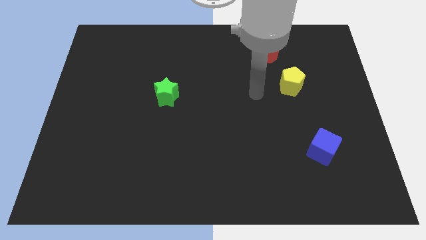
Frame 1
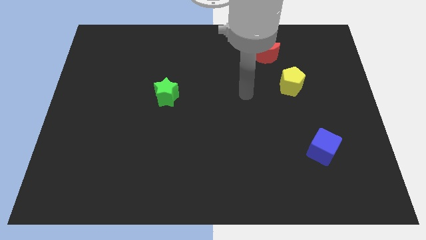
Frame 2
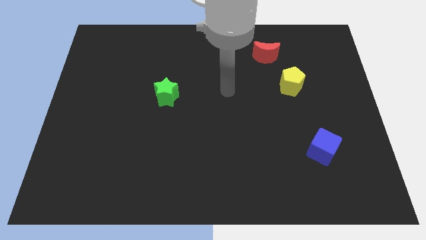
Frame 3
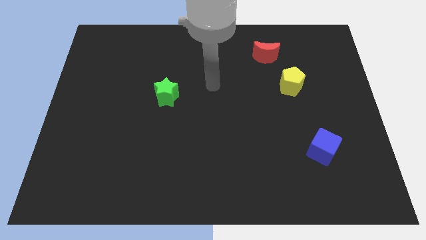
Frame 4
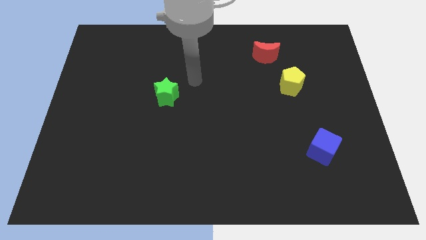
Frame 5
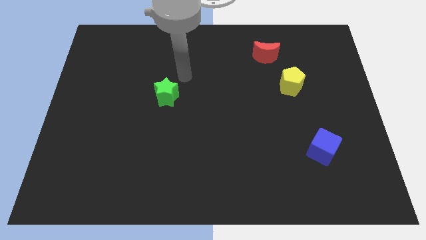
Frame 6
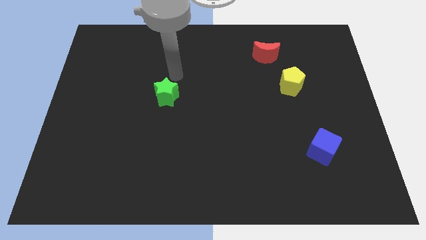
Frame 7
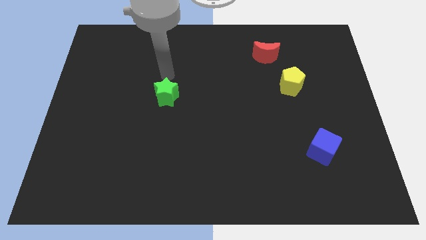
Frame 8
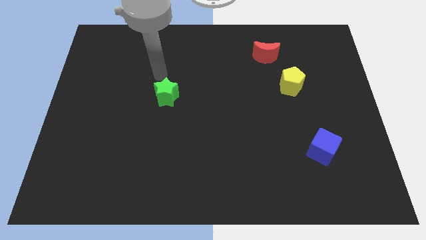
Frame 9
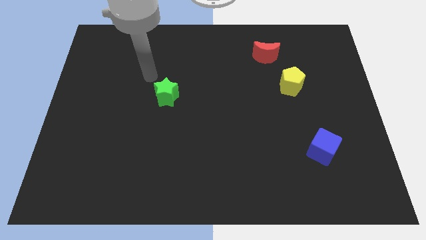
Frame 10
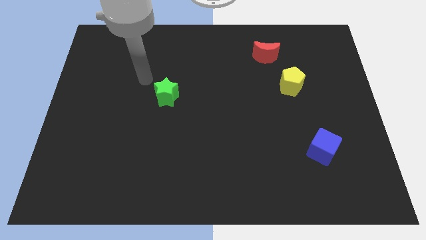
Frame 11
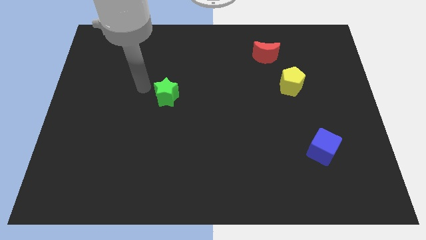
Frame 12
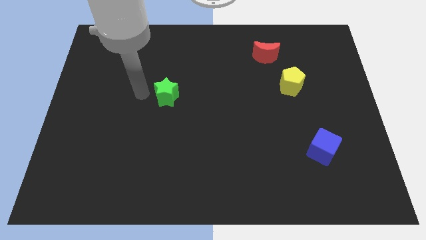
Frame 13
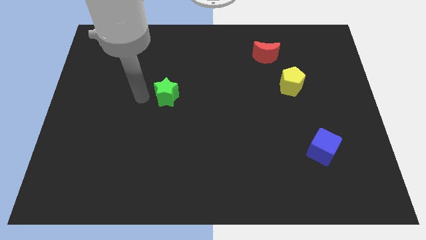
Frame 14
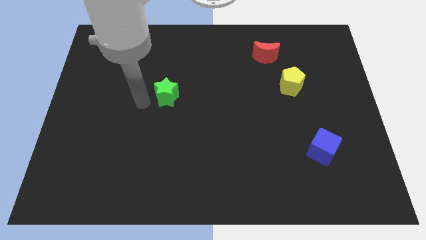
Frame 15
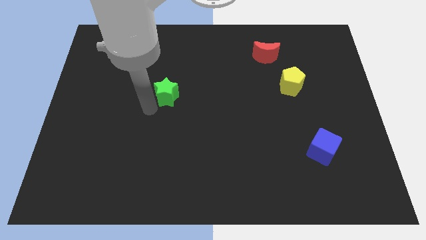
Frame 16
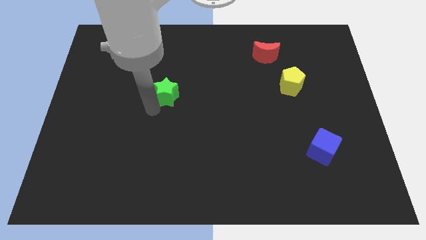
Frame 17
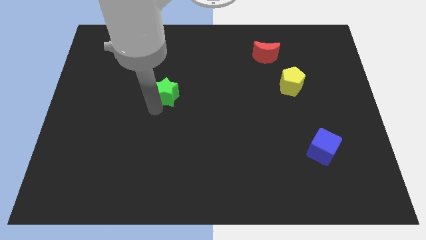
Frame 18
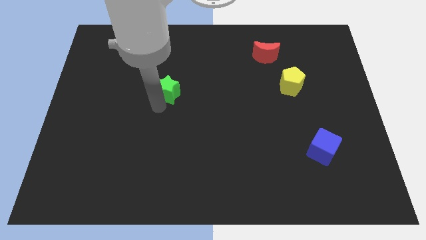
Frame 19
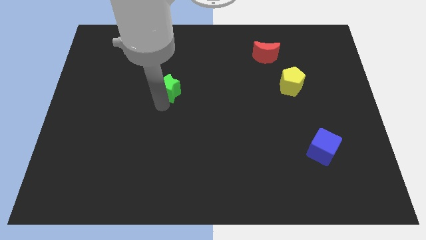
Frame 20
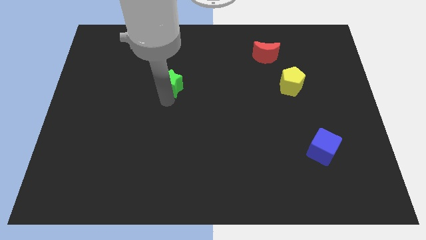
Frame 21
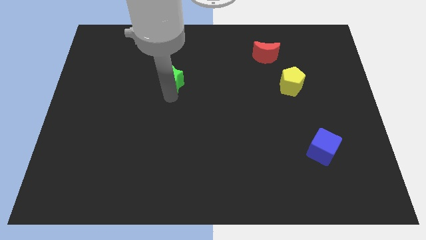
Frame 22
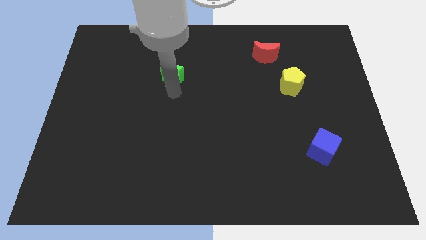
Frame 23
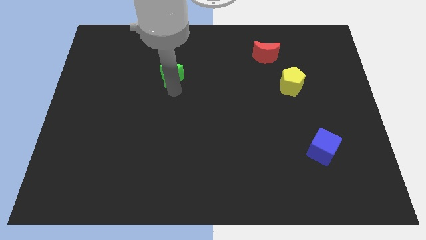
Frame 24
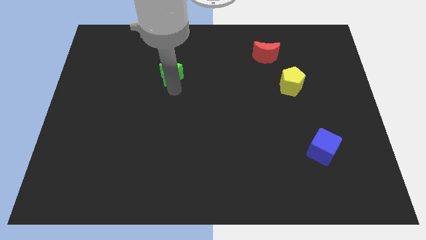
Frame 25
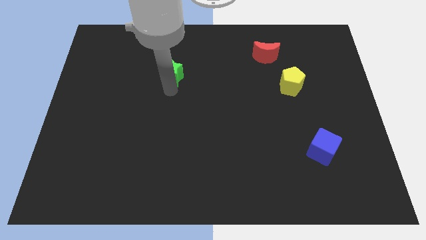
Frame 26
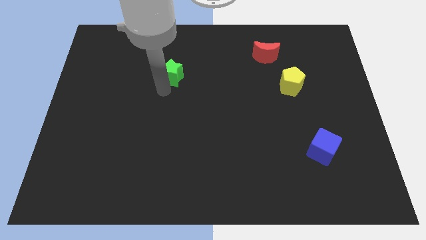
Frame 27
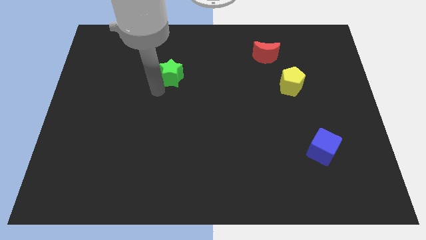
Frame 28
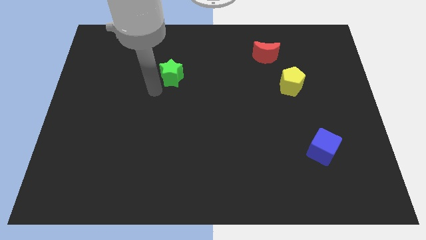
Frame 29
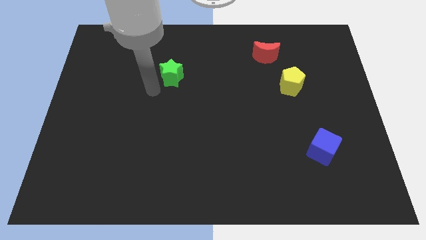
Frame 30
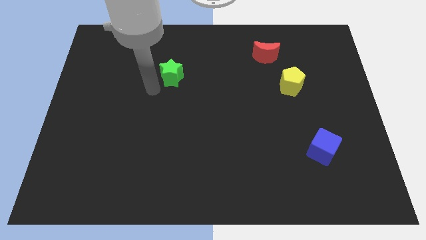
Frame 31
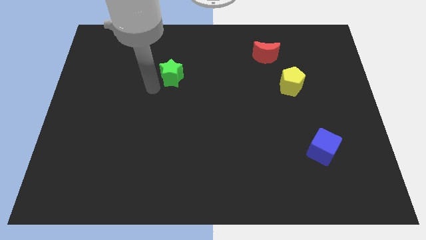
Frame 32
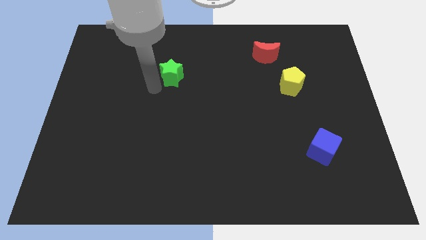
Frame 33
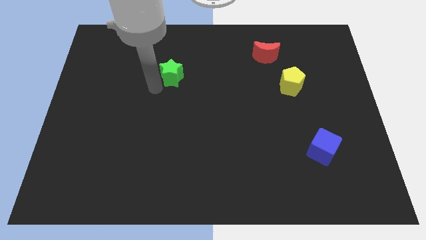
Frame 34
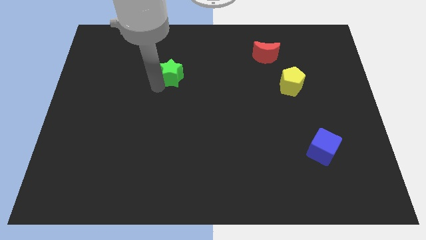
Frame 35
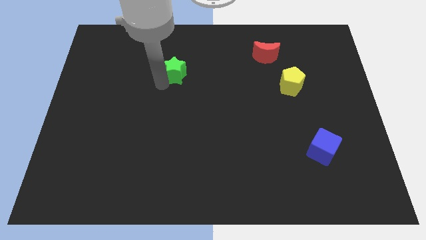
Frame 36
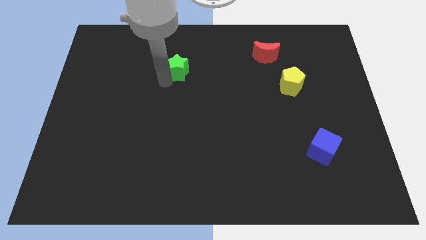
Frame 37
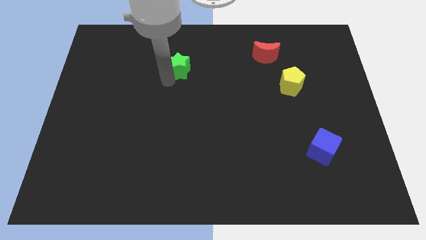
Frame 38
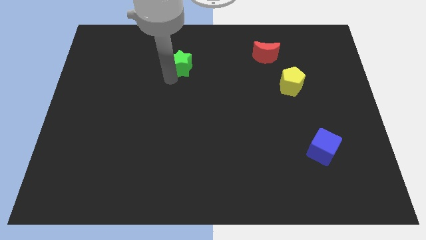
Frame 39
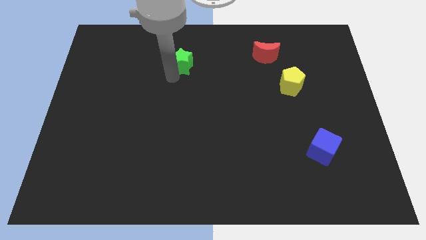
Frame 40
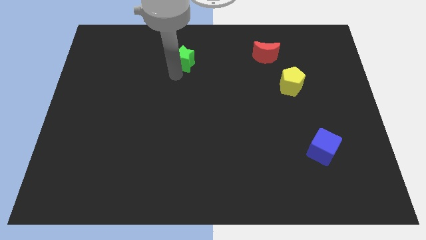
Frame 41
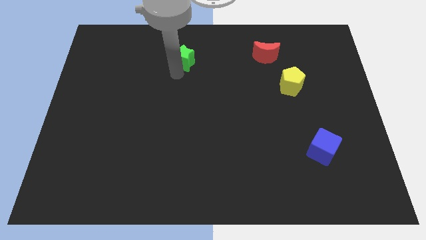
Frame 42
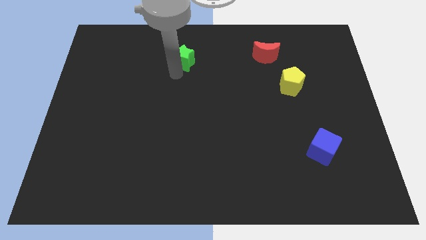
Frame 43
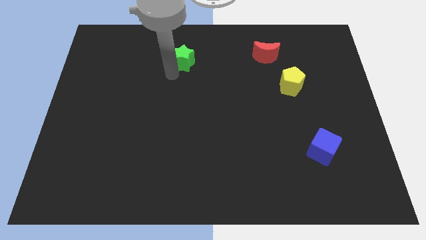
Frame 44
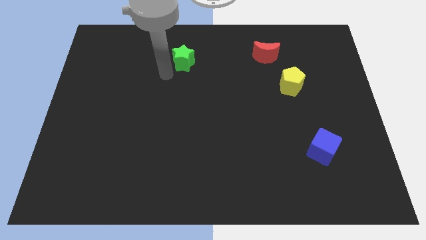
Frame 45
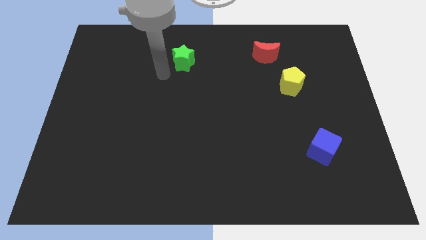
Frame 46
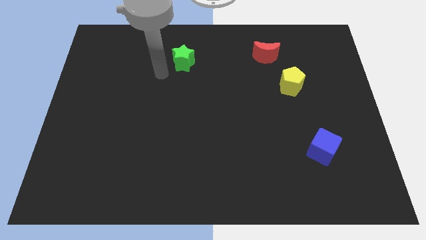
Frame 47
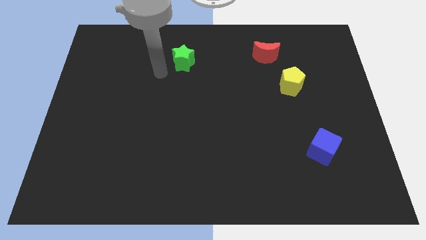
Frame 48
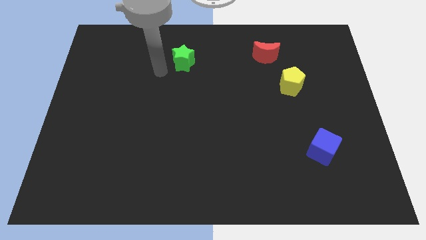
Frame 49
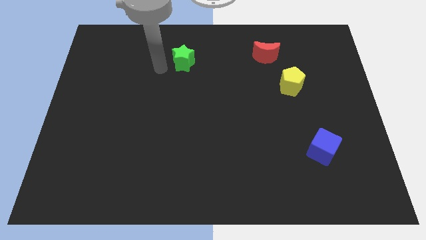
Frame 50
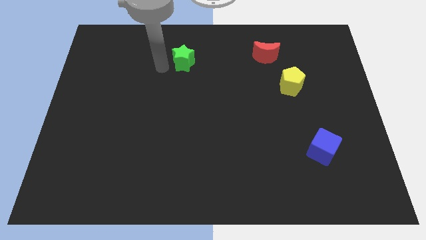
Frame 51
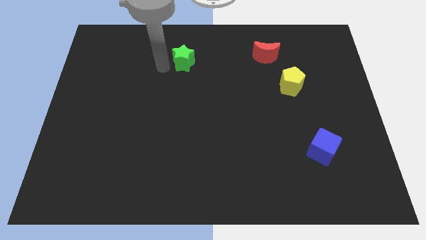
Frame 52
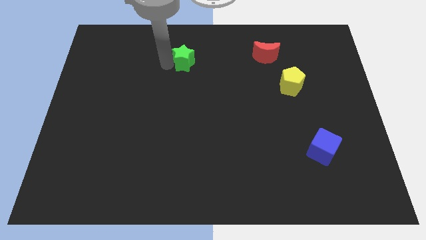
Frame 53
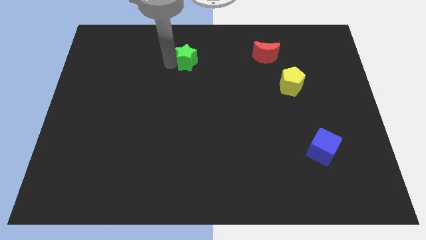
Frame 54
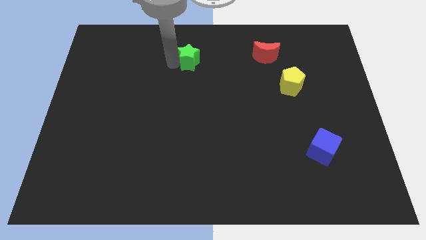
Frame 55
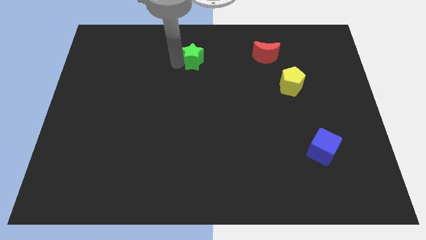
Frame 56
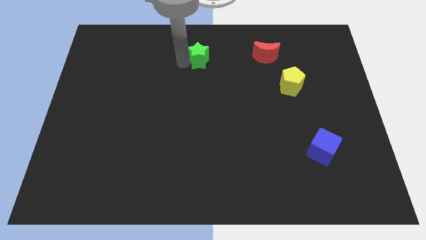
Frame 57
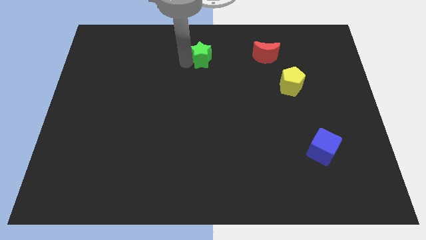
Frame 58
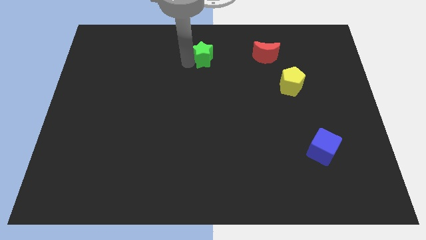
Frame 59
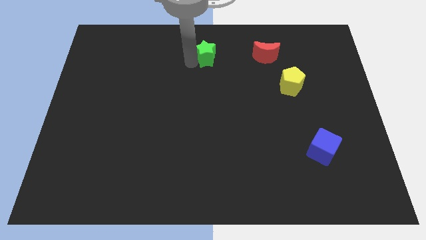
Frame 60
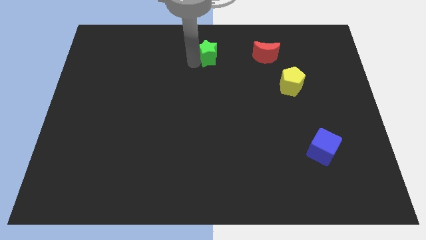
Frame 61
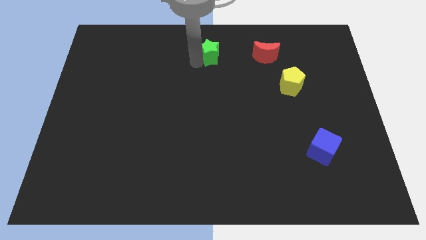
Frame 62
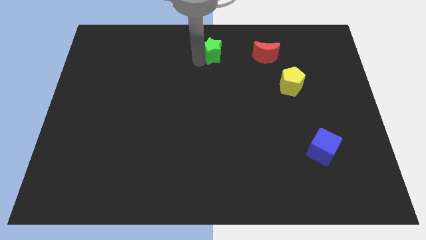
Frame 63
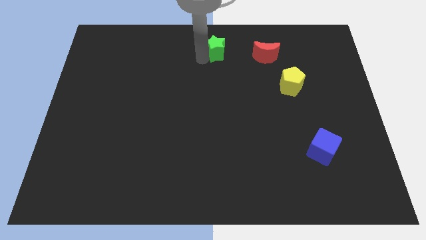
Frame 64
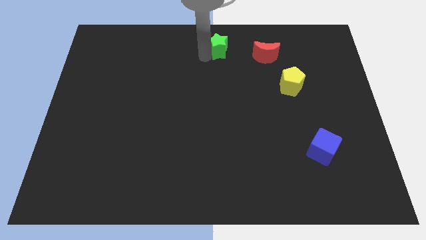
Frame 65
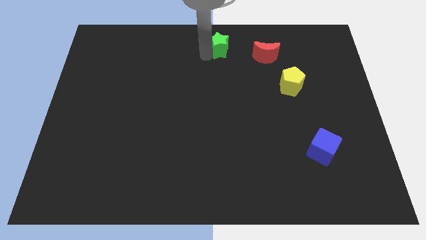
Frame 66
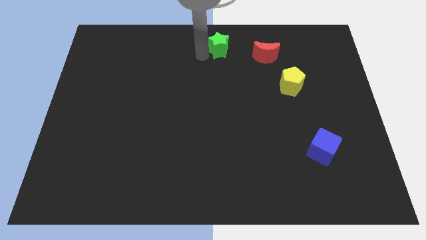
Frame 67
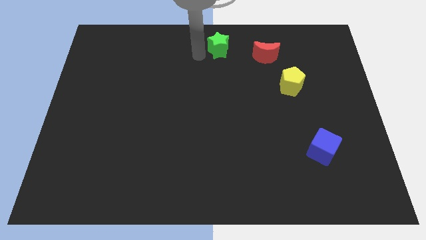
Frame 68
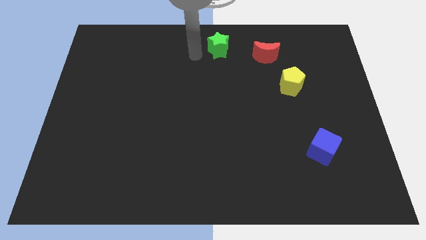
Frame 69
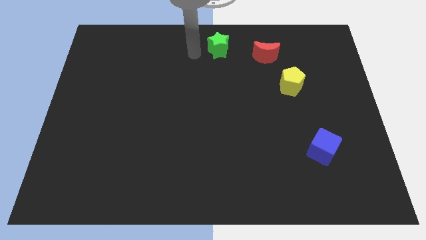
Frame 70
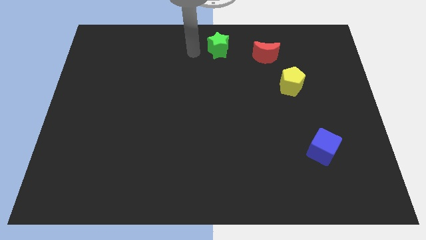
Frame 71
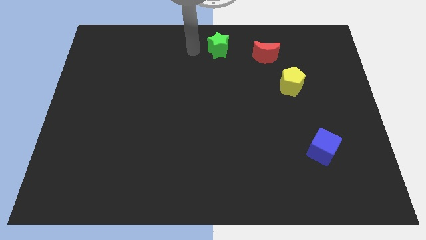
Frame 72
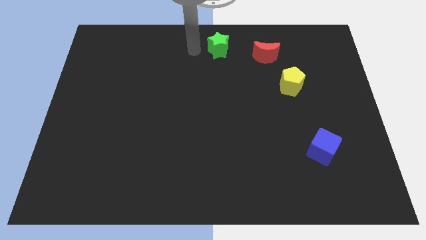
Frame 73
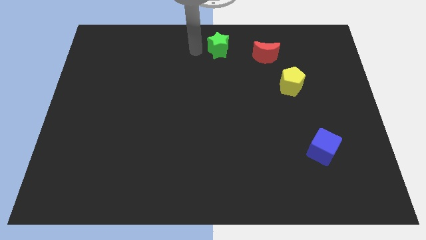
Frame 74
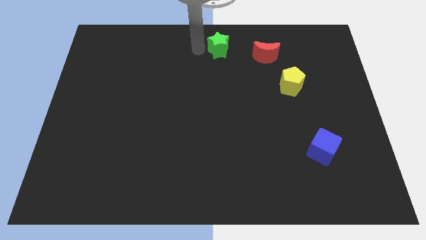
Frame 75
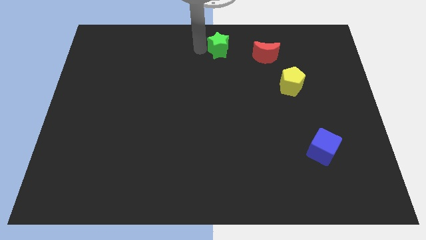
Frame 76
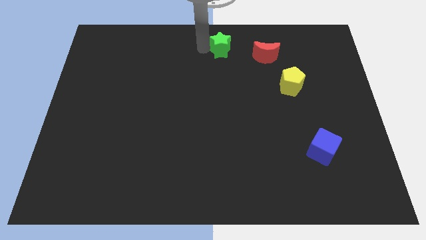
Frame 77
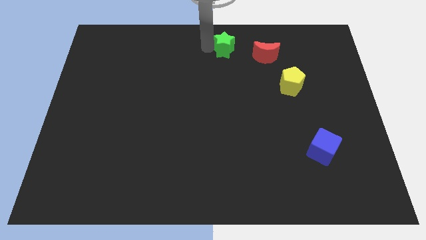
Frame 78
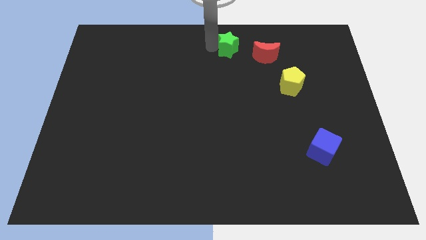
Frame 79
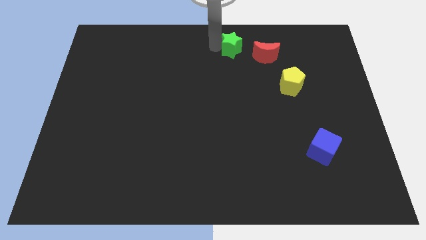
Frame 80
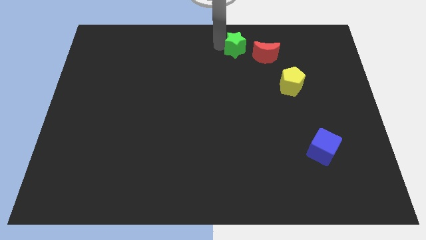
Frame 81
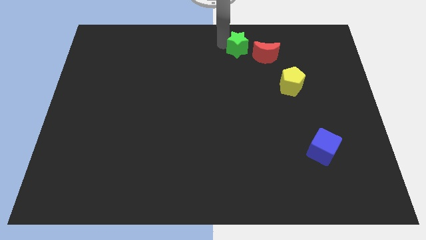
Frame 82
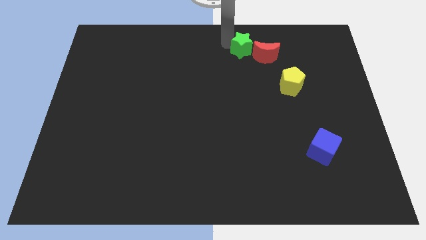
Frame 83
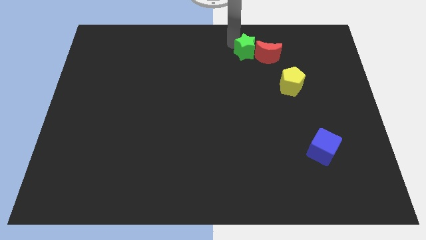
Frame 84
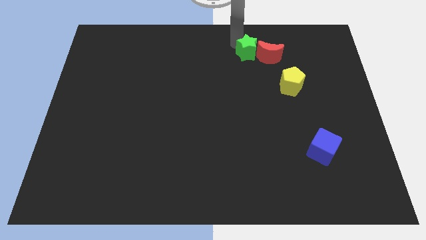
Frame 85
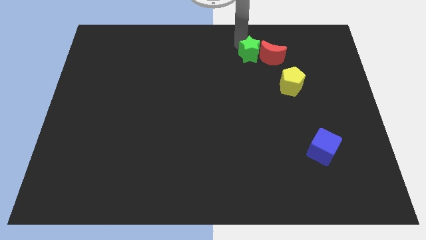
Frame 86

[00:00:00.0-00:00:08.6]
move the green block to the red block

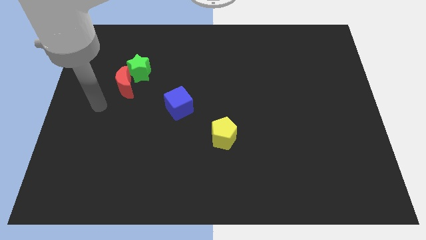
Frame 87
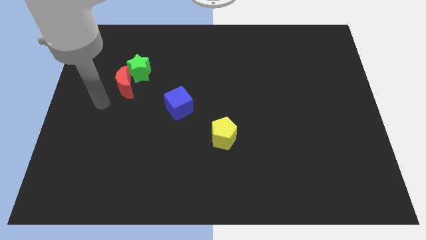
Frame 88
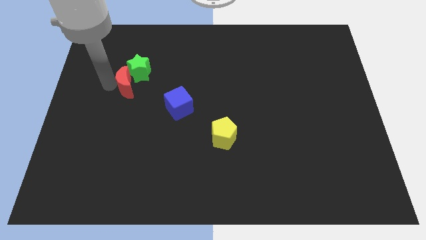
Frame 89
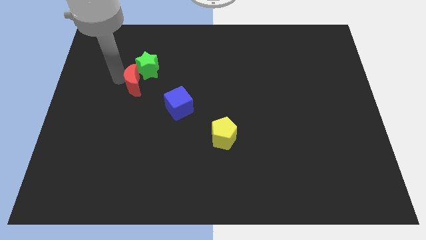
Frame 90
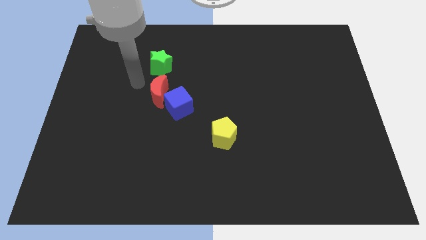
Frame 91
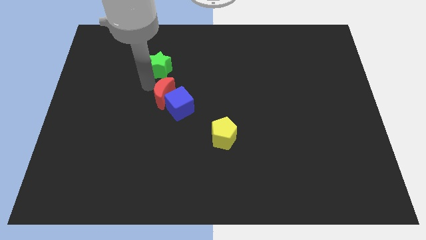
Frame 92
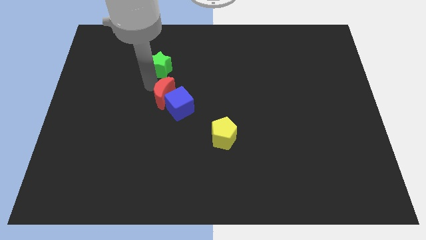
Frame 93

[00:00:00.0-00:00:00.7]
slide the red moon towards the cube
